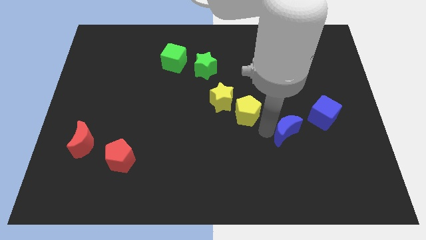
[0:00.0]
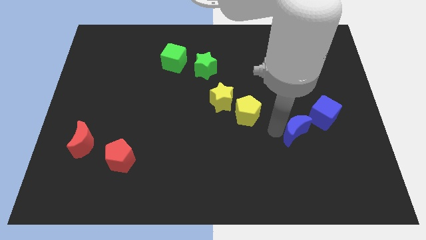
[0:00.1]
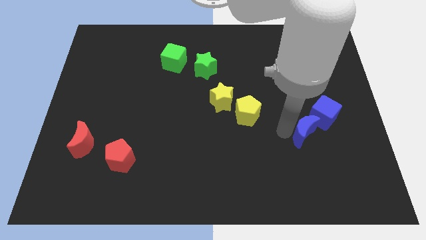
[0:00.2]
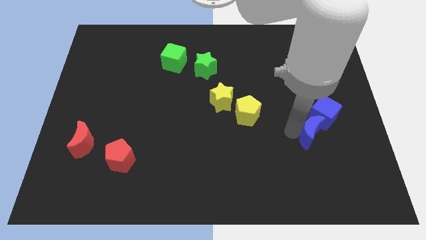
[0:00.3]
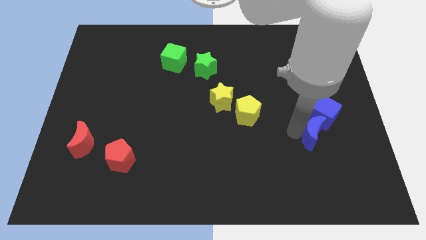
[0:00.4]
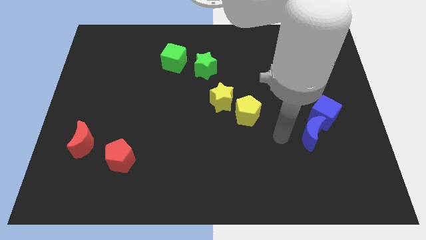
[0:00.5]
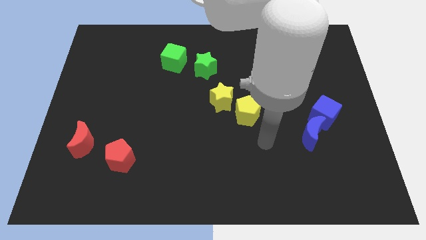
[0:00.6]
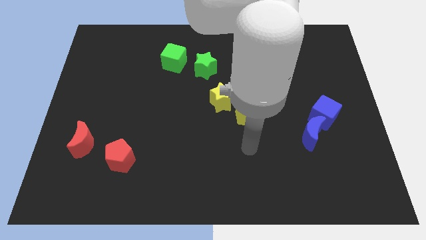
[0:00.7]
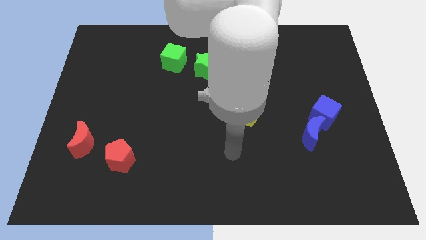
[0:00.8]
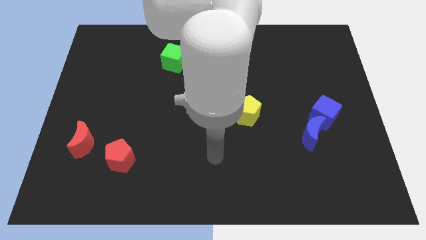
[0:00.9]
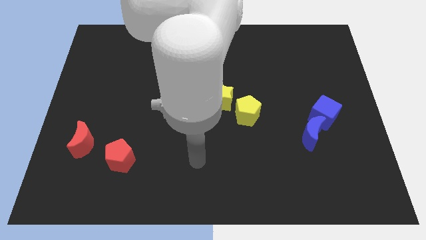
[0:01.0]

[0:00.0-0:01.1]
move blue crescent towards the blue cube

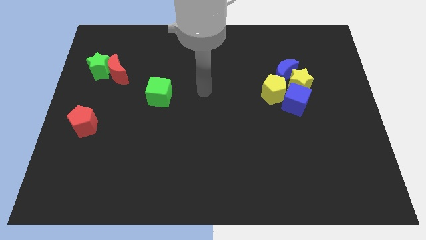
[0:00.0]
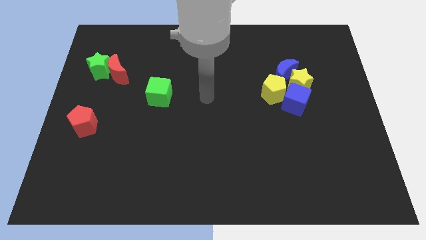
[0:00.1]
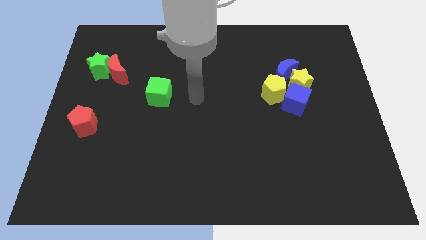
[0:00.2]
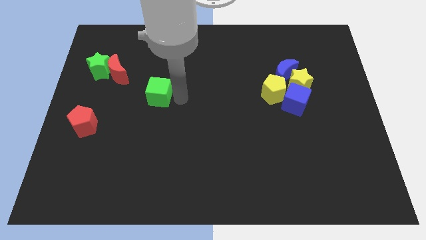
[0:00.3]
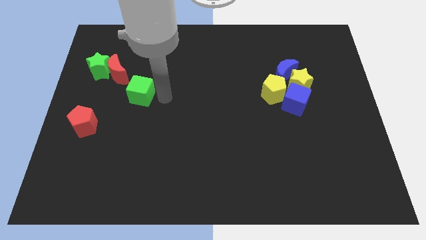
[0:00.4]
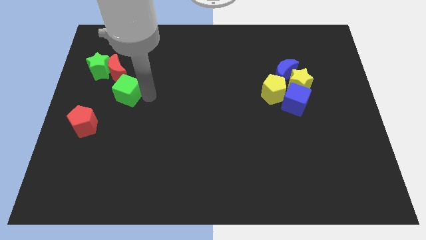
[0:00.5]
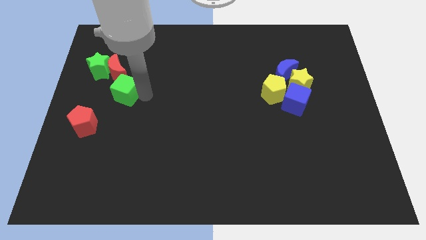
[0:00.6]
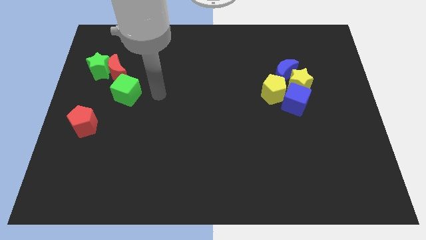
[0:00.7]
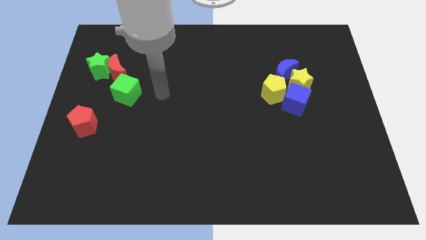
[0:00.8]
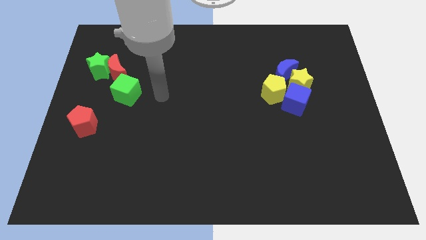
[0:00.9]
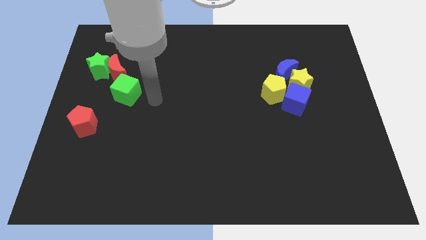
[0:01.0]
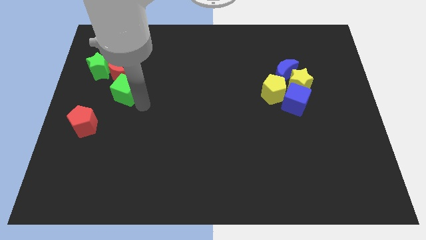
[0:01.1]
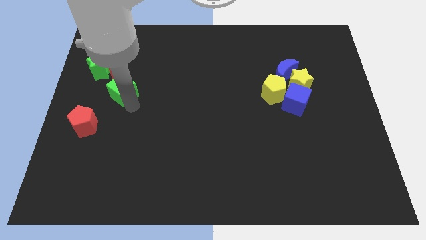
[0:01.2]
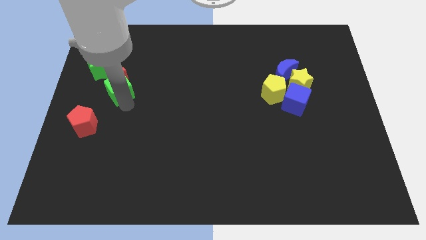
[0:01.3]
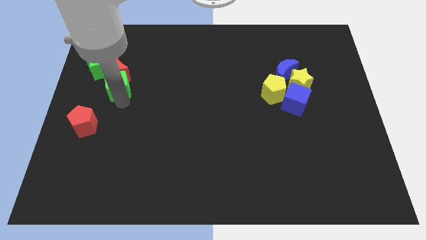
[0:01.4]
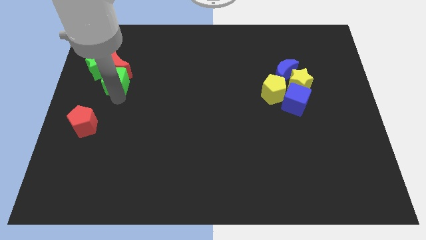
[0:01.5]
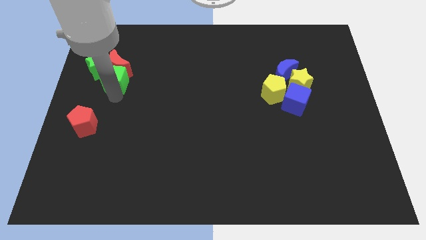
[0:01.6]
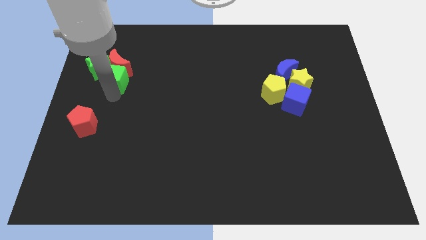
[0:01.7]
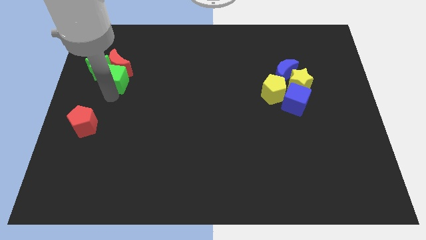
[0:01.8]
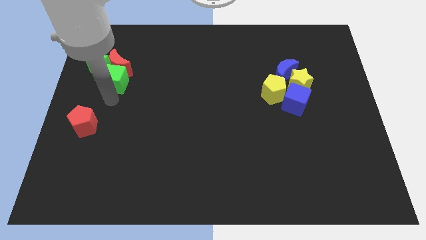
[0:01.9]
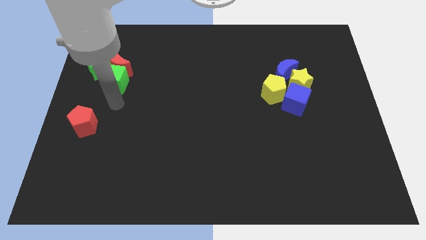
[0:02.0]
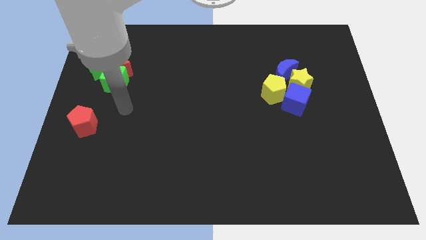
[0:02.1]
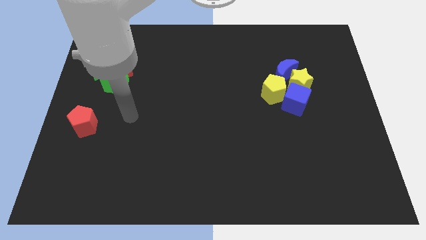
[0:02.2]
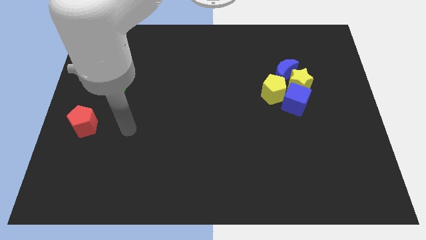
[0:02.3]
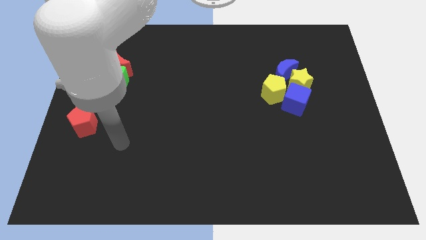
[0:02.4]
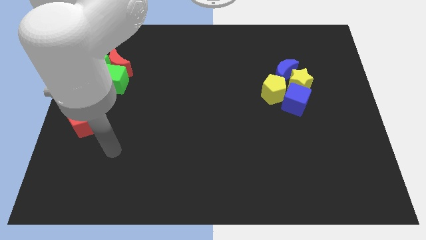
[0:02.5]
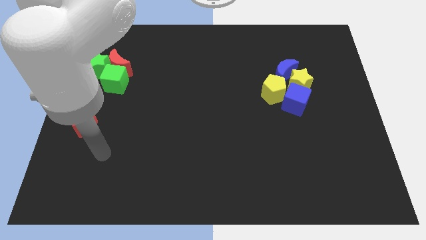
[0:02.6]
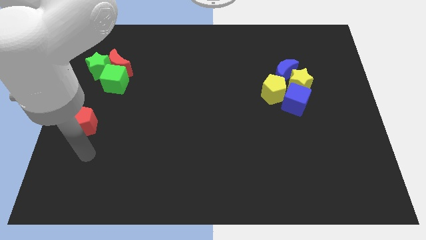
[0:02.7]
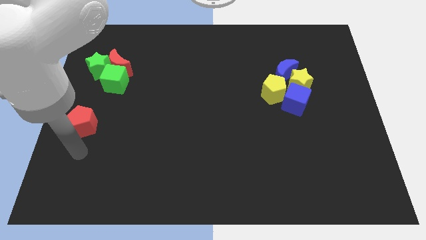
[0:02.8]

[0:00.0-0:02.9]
move the green cube into the red moon

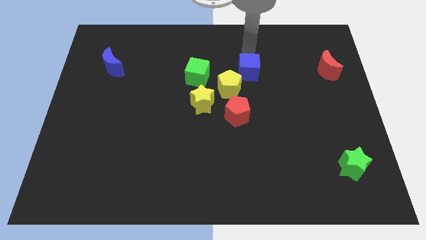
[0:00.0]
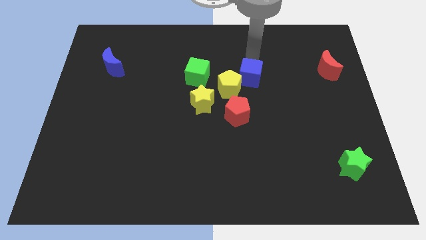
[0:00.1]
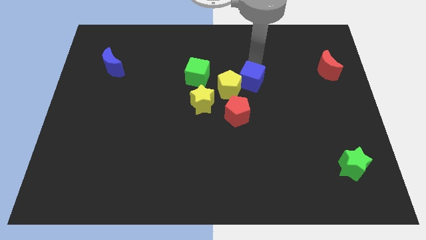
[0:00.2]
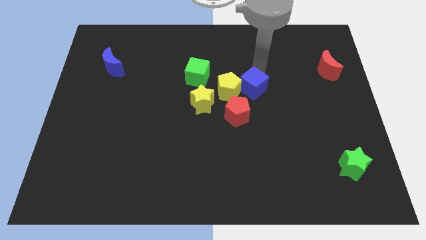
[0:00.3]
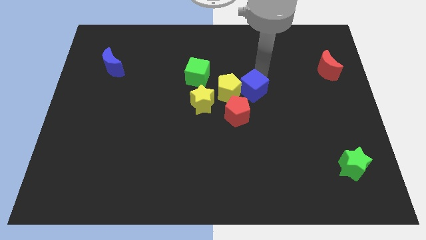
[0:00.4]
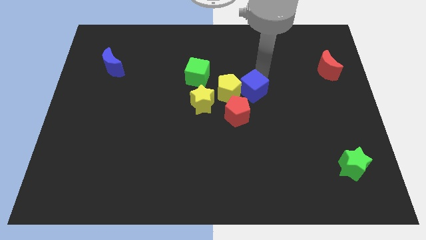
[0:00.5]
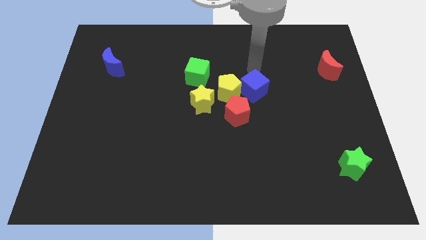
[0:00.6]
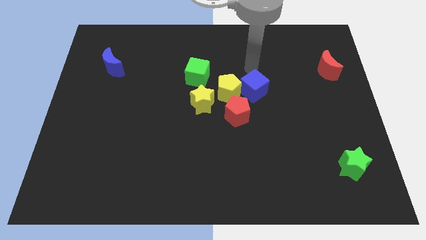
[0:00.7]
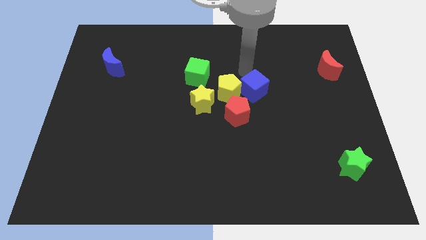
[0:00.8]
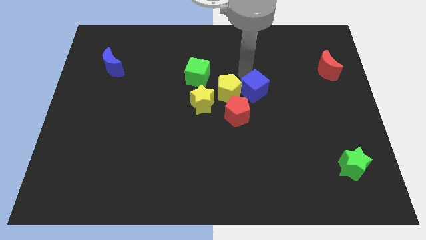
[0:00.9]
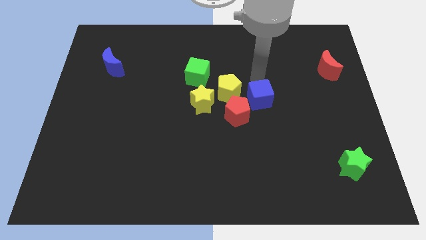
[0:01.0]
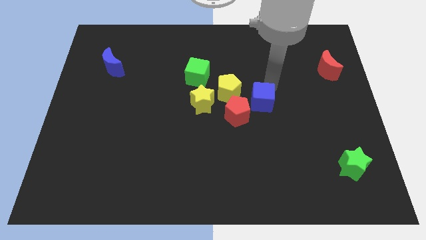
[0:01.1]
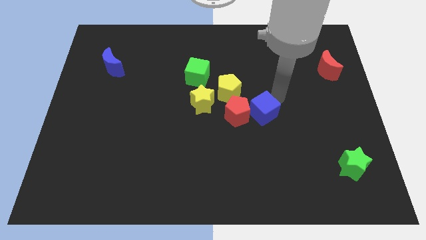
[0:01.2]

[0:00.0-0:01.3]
push the blue cube to the right of the red pentagon

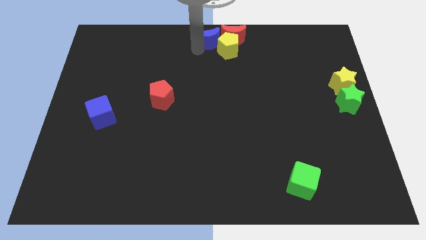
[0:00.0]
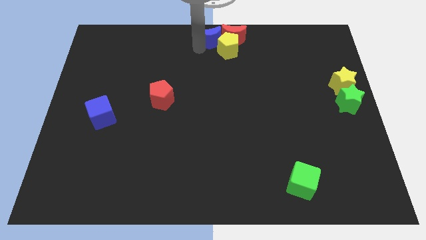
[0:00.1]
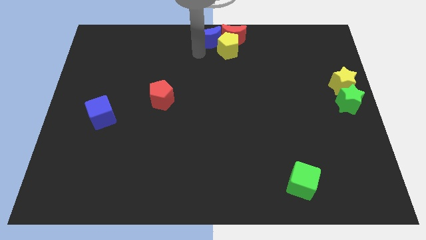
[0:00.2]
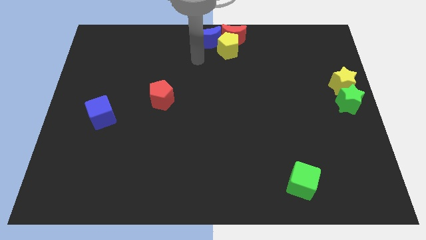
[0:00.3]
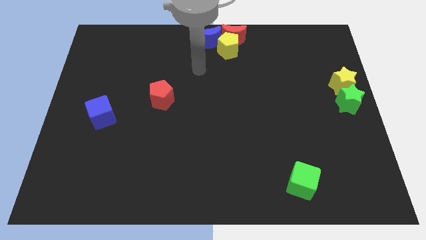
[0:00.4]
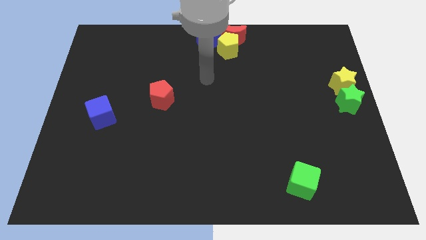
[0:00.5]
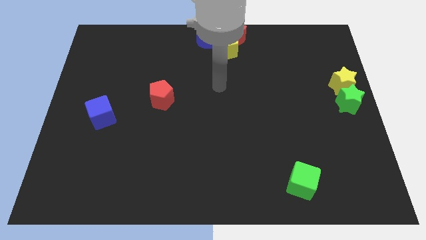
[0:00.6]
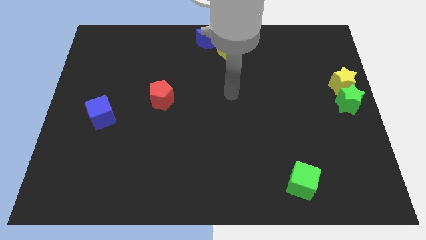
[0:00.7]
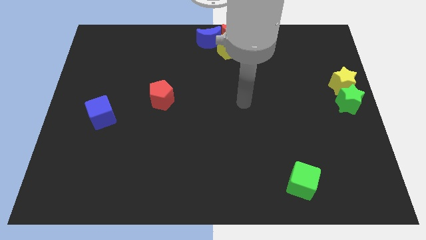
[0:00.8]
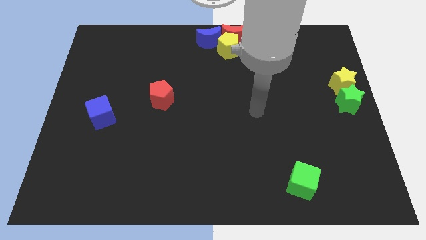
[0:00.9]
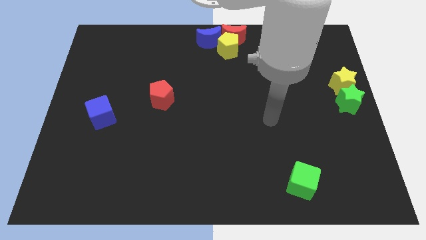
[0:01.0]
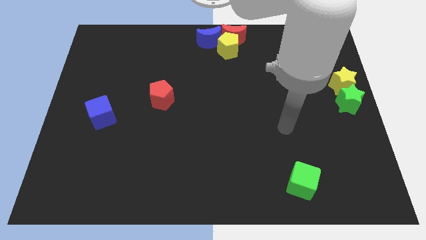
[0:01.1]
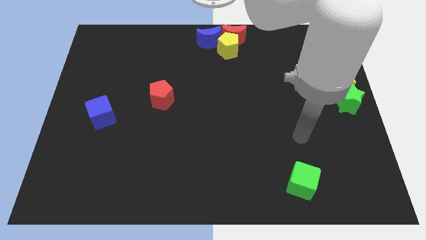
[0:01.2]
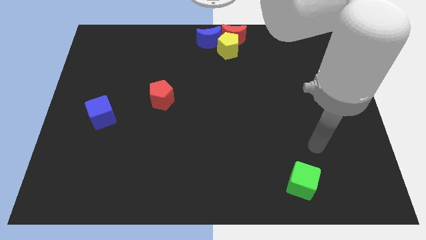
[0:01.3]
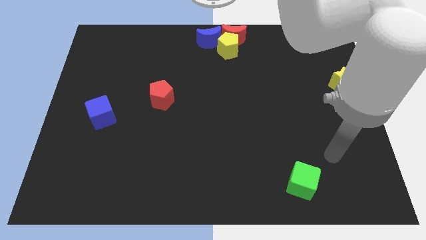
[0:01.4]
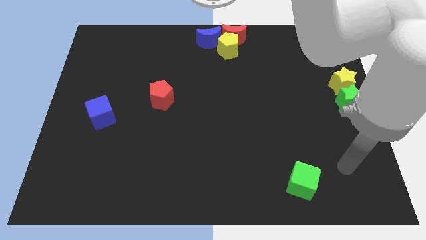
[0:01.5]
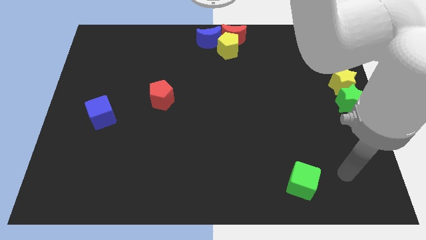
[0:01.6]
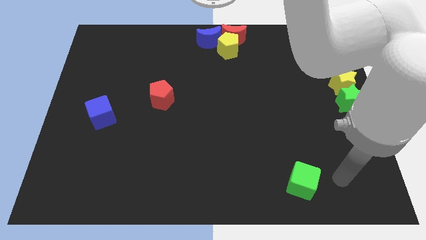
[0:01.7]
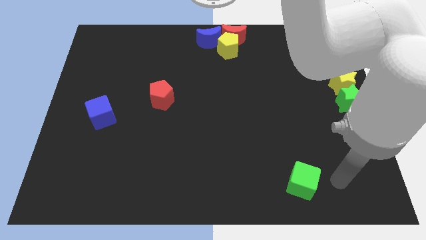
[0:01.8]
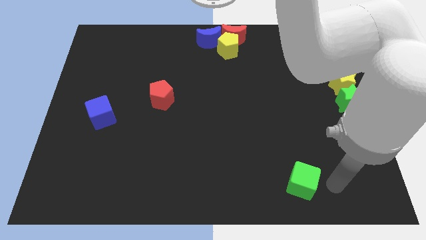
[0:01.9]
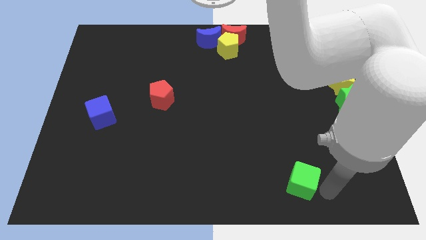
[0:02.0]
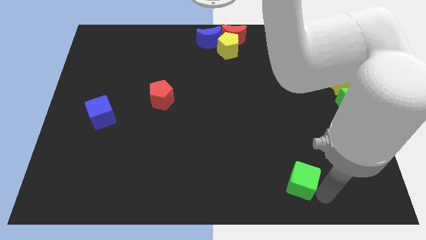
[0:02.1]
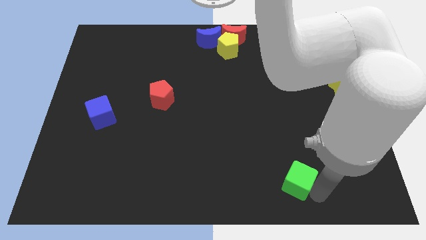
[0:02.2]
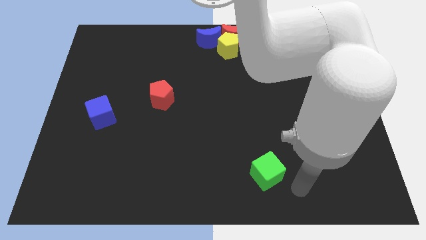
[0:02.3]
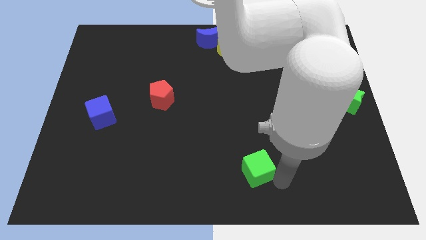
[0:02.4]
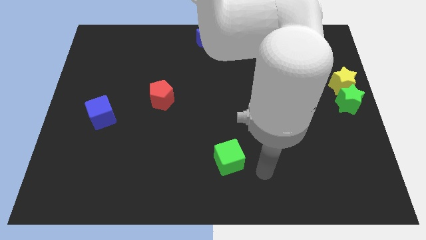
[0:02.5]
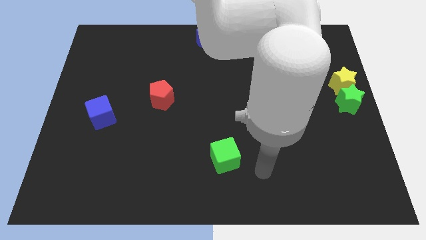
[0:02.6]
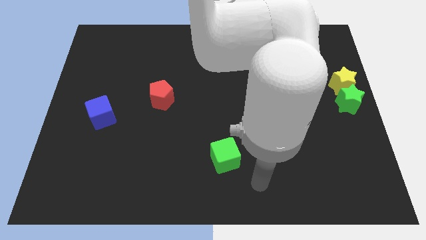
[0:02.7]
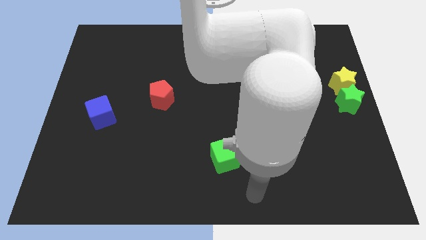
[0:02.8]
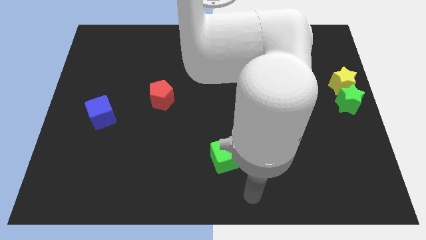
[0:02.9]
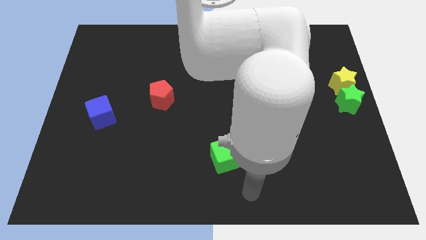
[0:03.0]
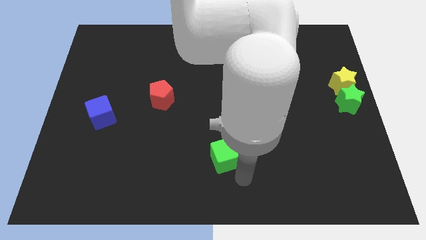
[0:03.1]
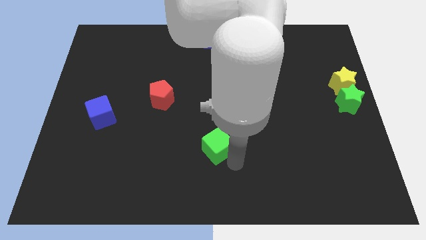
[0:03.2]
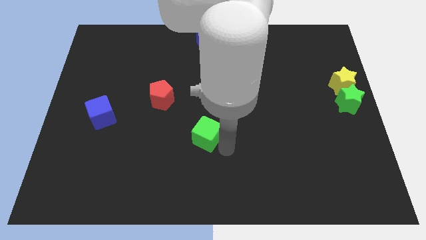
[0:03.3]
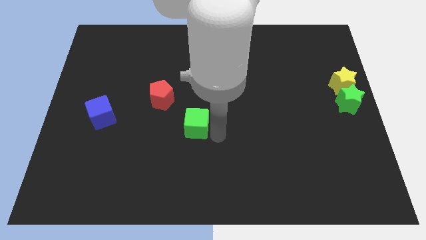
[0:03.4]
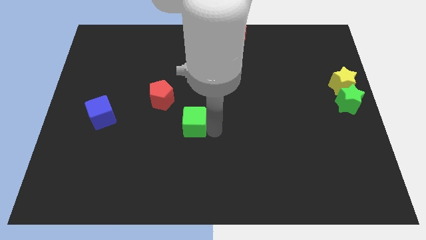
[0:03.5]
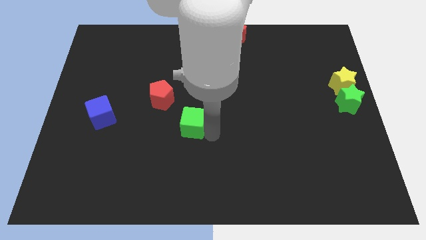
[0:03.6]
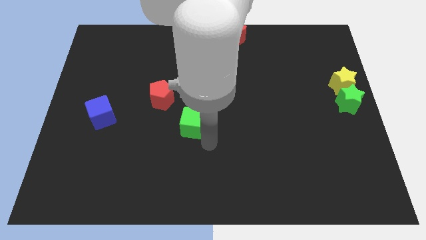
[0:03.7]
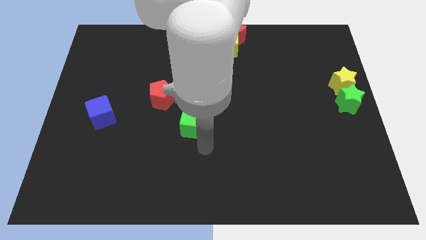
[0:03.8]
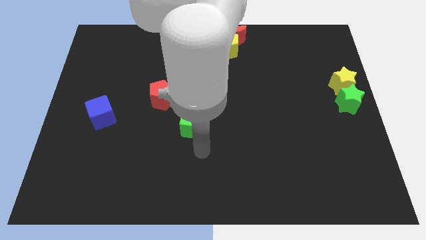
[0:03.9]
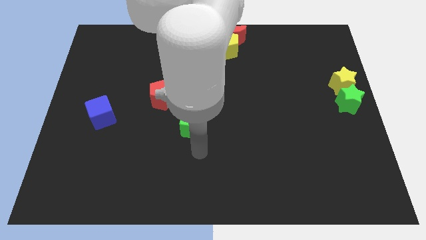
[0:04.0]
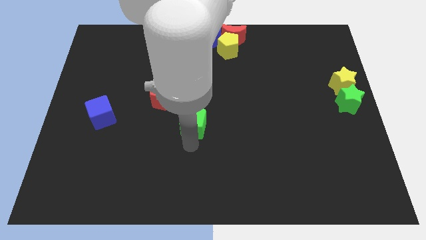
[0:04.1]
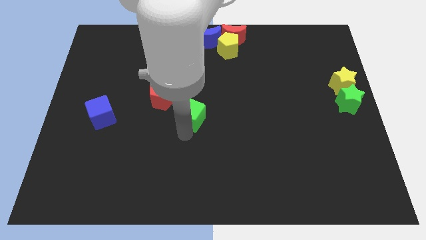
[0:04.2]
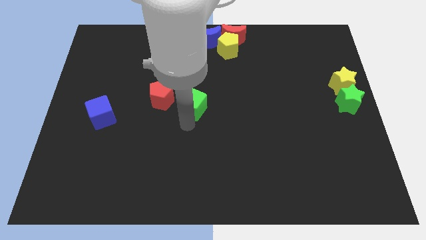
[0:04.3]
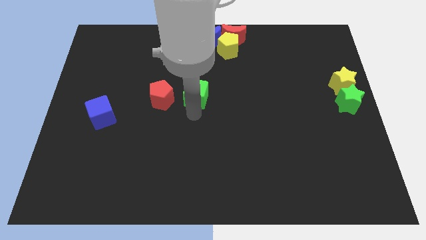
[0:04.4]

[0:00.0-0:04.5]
put the green cube to the left of the green star
